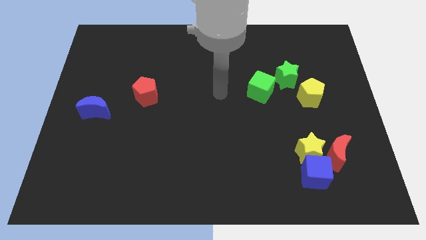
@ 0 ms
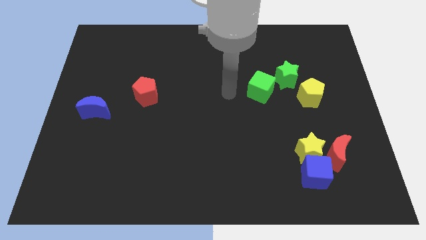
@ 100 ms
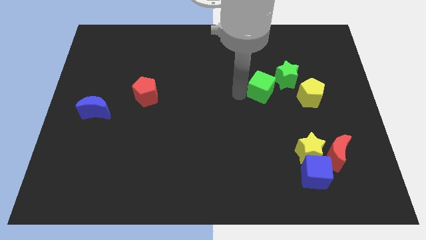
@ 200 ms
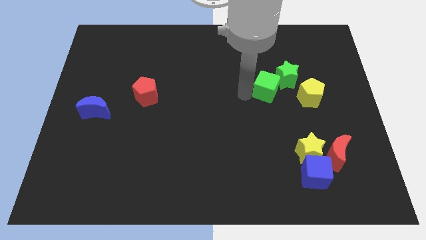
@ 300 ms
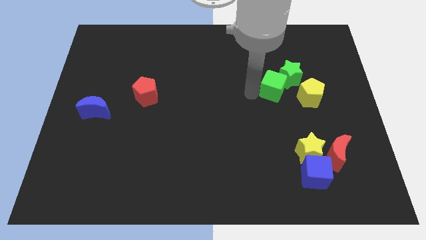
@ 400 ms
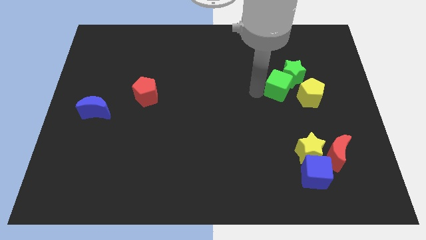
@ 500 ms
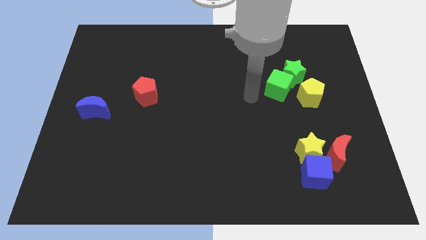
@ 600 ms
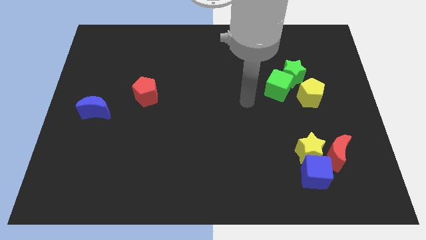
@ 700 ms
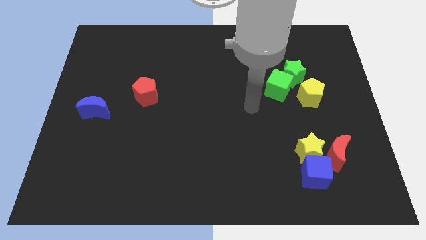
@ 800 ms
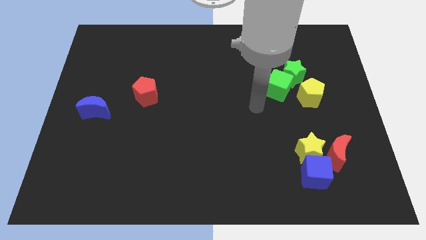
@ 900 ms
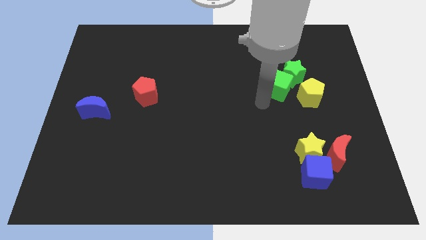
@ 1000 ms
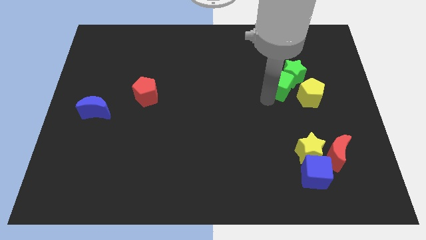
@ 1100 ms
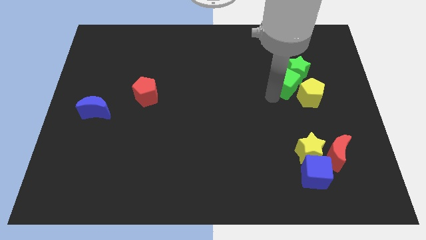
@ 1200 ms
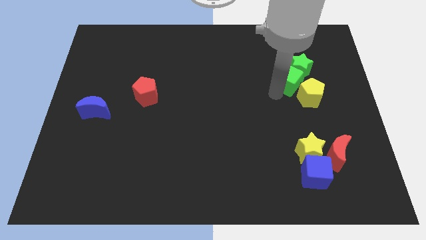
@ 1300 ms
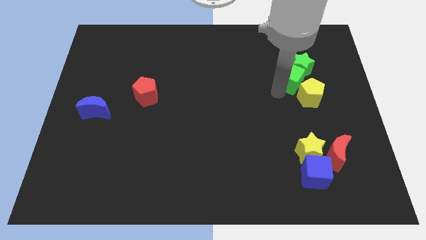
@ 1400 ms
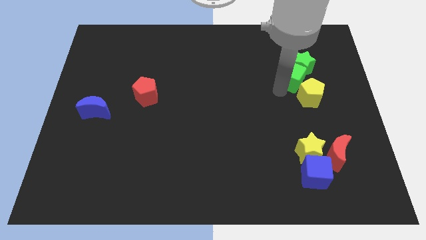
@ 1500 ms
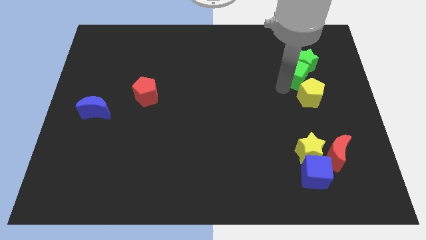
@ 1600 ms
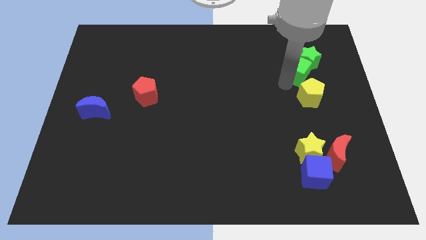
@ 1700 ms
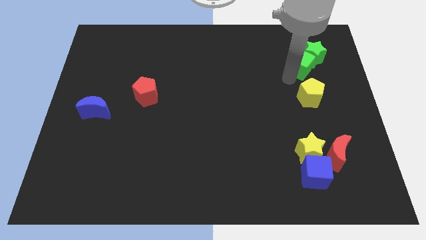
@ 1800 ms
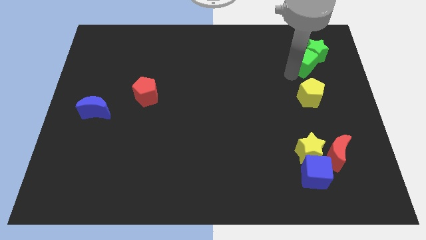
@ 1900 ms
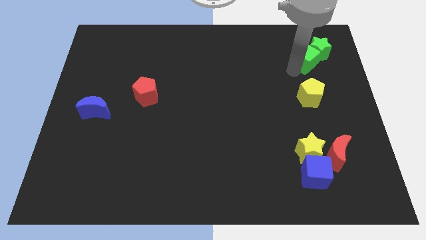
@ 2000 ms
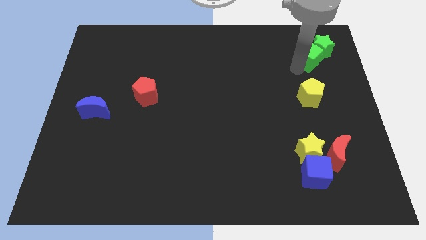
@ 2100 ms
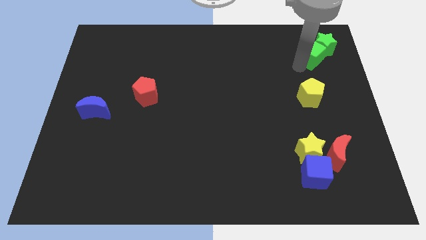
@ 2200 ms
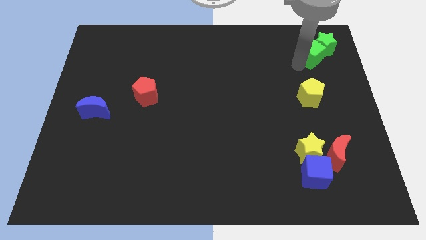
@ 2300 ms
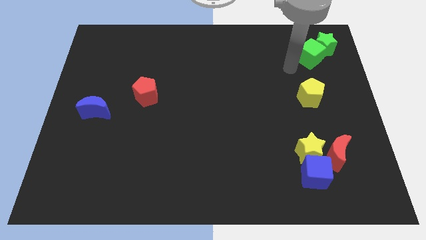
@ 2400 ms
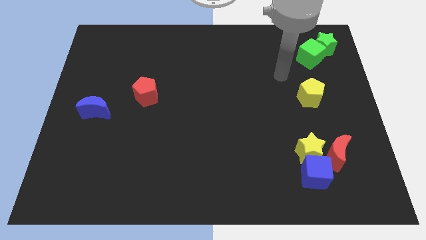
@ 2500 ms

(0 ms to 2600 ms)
place the green blocks at top right corner of the board

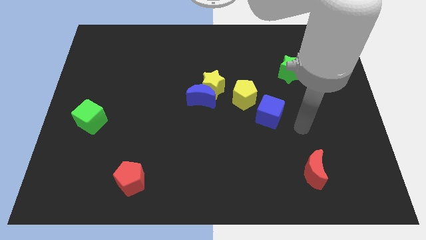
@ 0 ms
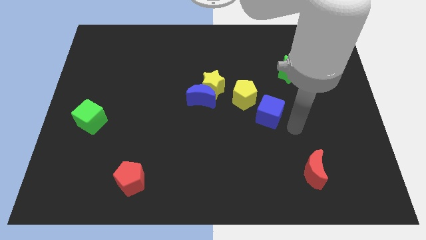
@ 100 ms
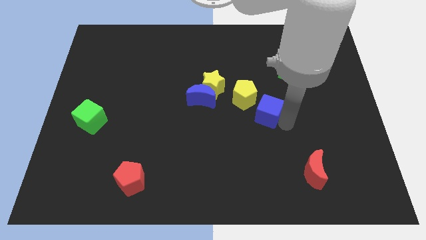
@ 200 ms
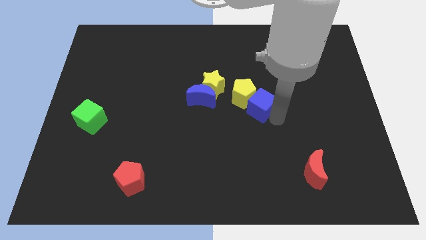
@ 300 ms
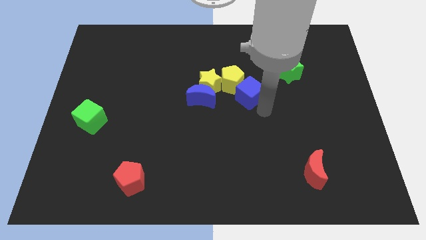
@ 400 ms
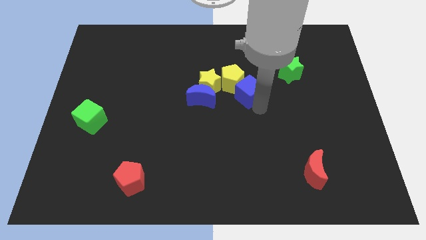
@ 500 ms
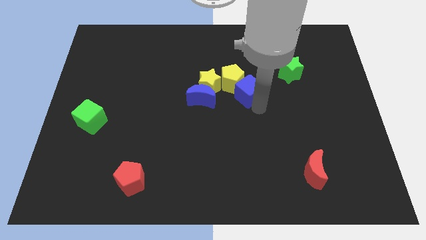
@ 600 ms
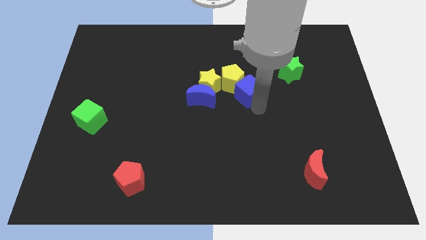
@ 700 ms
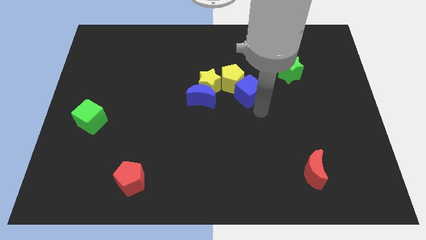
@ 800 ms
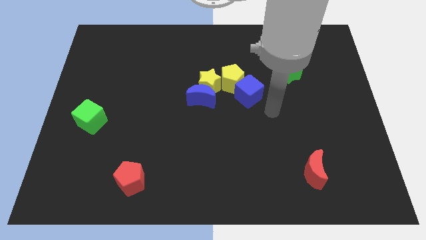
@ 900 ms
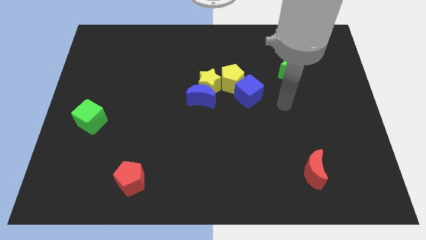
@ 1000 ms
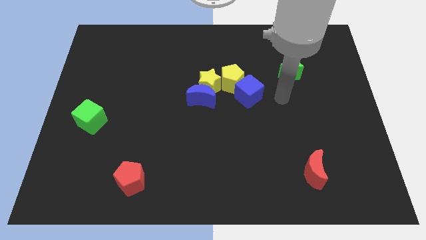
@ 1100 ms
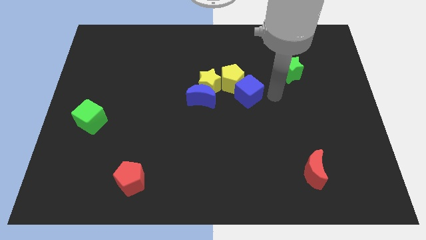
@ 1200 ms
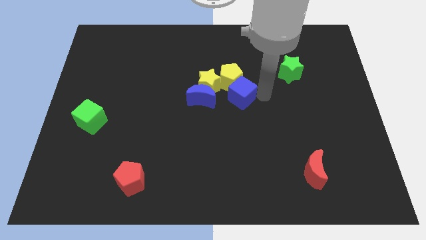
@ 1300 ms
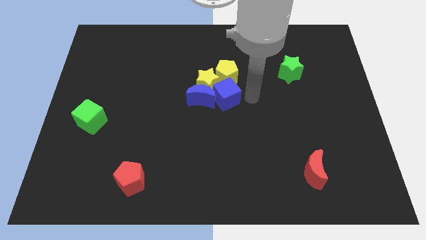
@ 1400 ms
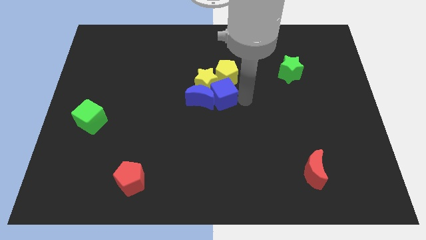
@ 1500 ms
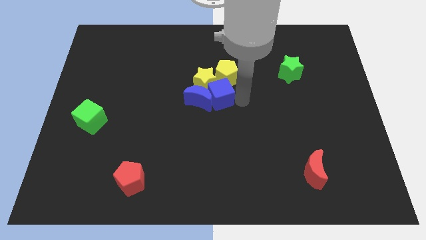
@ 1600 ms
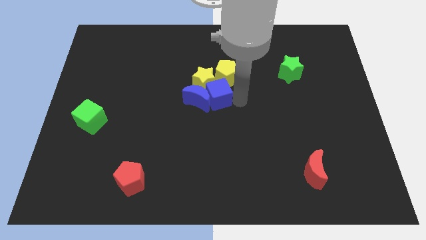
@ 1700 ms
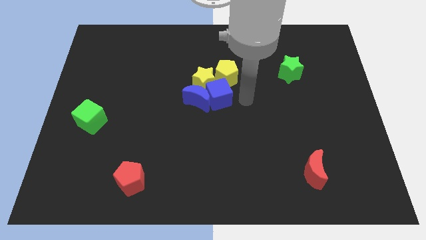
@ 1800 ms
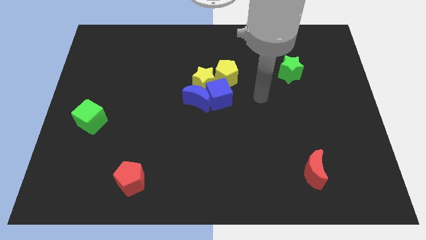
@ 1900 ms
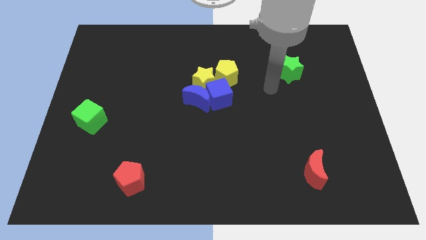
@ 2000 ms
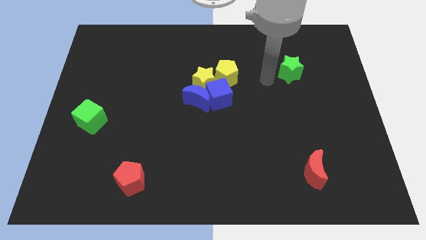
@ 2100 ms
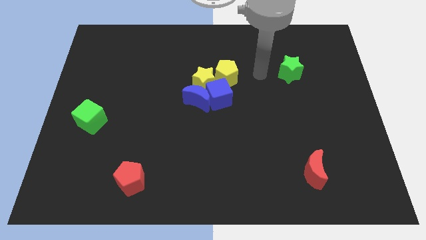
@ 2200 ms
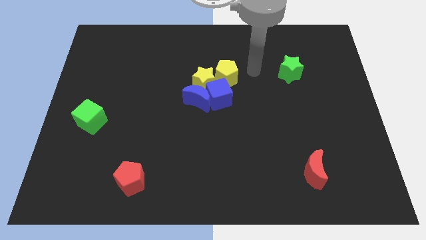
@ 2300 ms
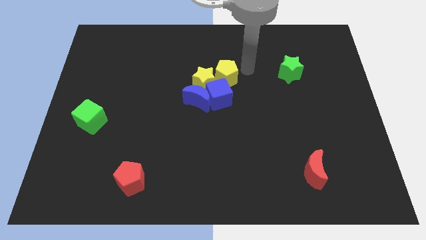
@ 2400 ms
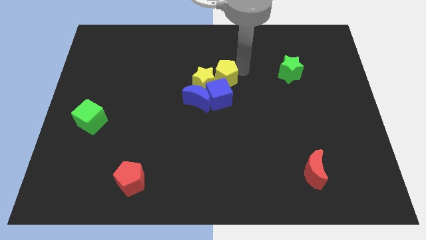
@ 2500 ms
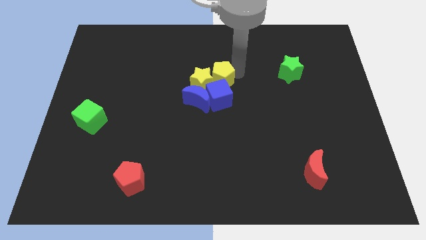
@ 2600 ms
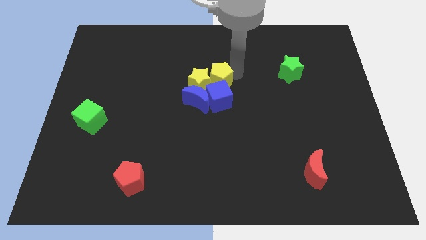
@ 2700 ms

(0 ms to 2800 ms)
move the blue cube right beside the blue moon

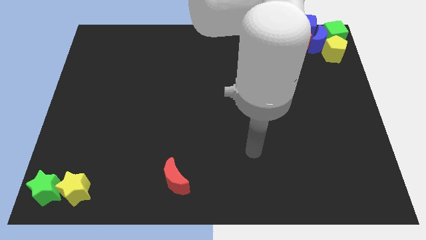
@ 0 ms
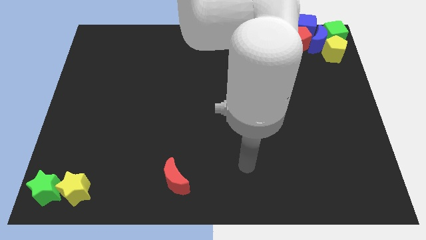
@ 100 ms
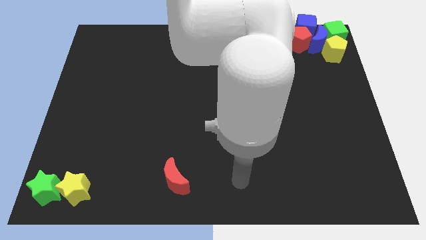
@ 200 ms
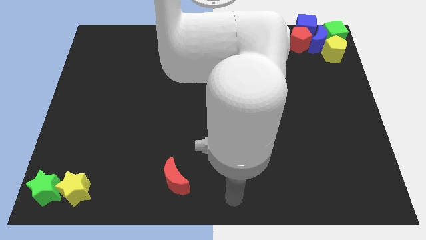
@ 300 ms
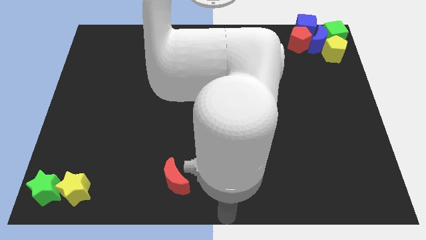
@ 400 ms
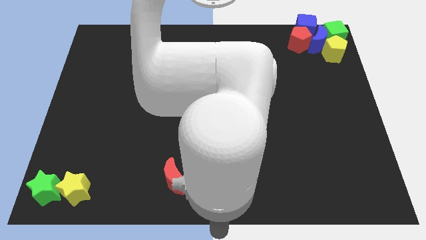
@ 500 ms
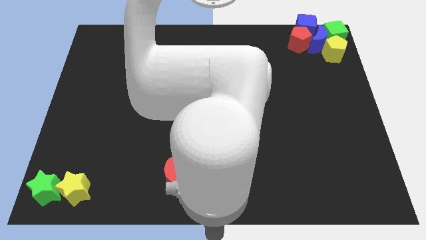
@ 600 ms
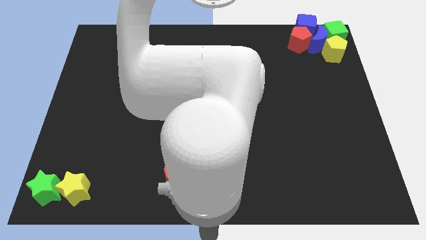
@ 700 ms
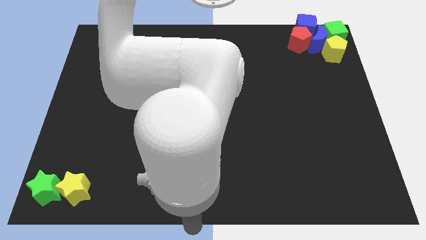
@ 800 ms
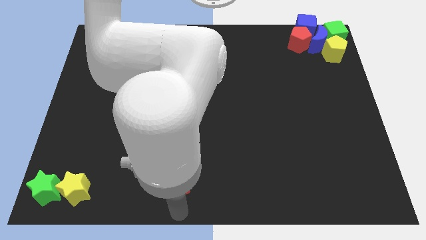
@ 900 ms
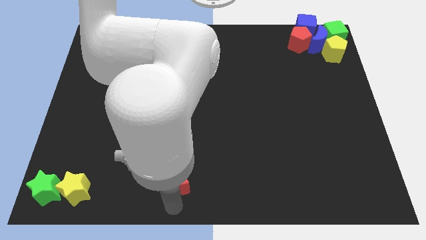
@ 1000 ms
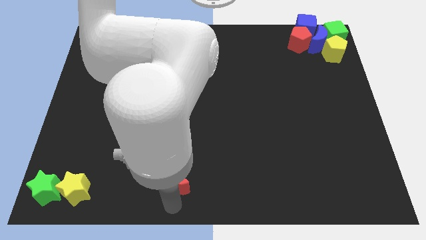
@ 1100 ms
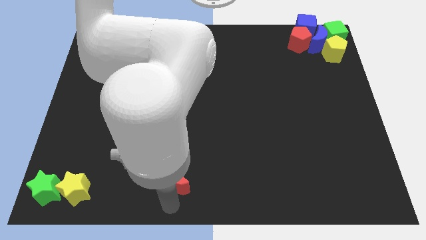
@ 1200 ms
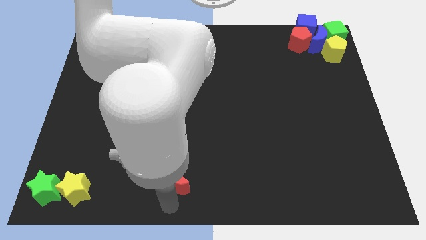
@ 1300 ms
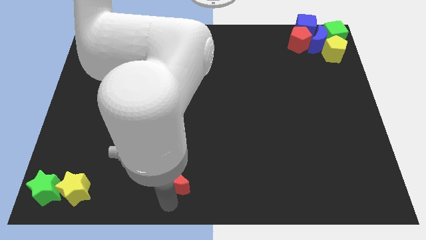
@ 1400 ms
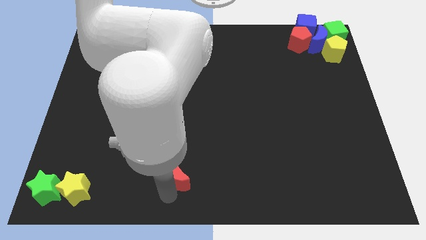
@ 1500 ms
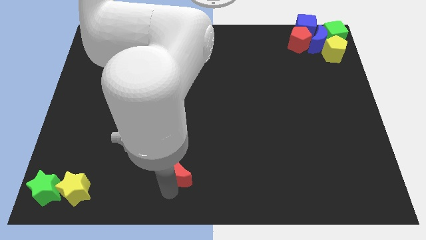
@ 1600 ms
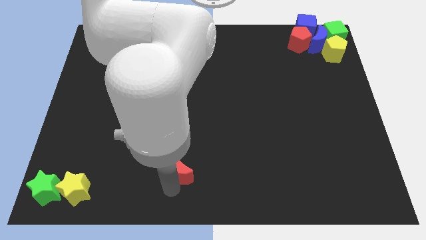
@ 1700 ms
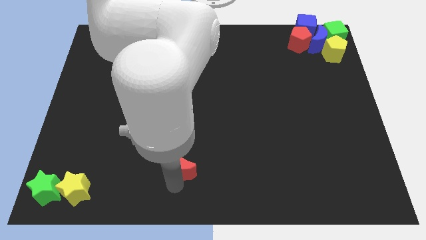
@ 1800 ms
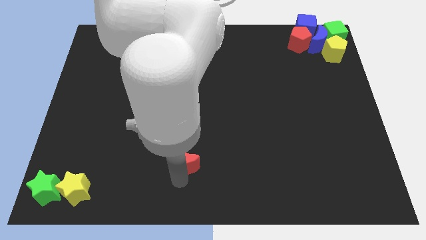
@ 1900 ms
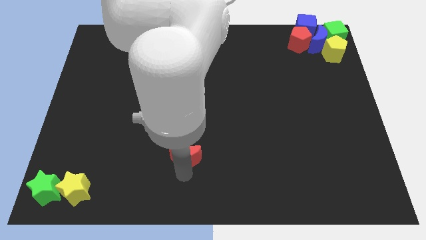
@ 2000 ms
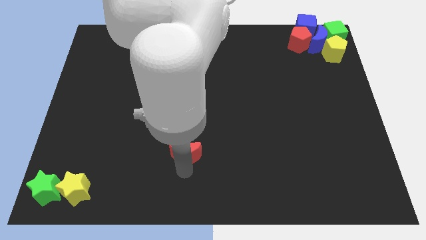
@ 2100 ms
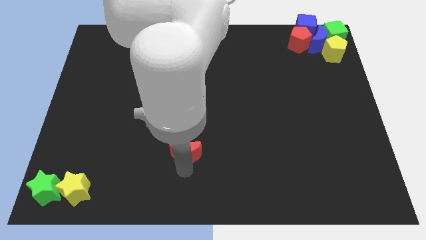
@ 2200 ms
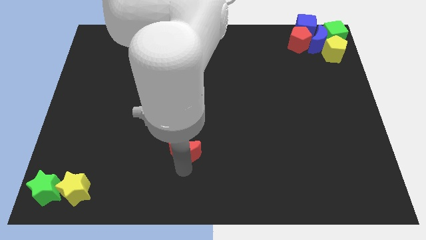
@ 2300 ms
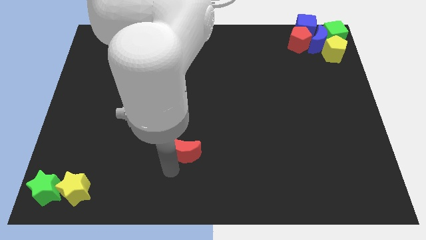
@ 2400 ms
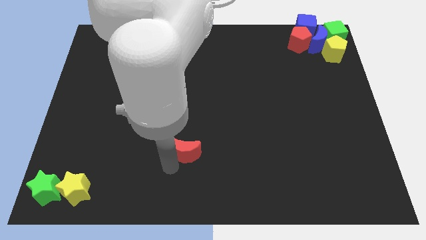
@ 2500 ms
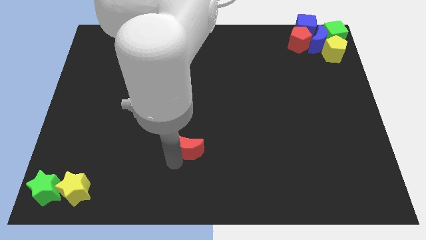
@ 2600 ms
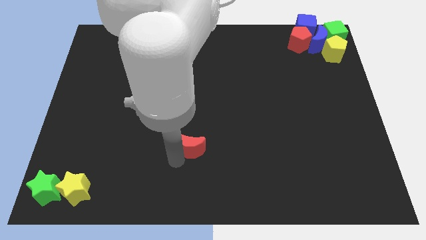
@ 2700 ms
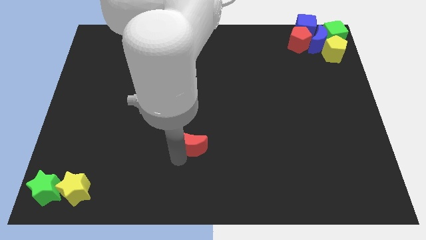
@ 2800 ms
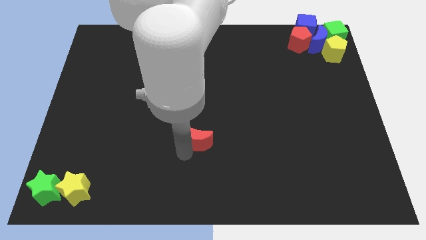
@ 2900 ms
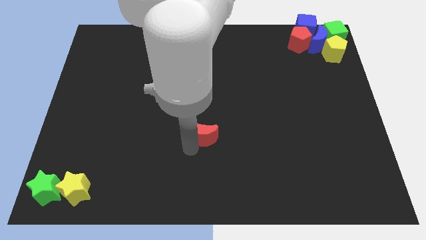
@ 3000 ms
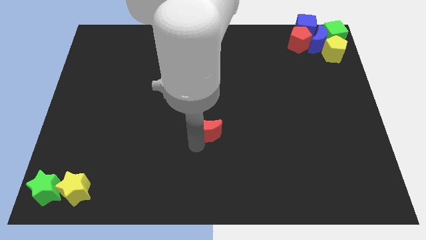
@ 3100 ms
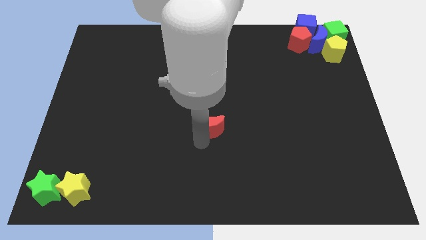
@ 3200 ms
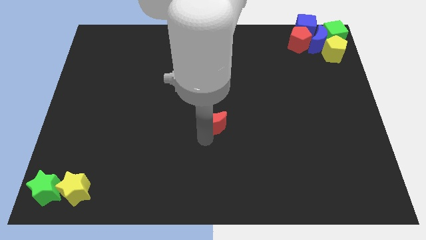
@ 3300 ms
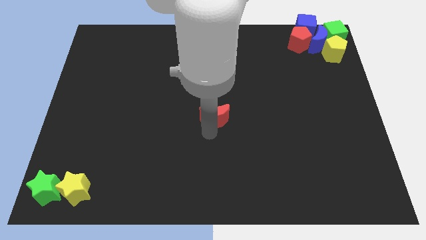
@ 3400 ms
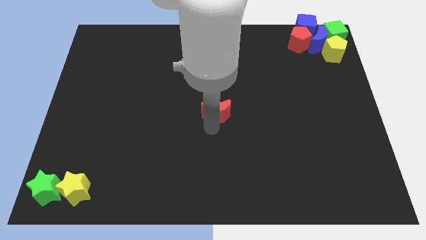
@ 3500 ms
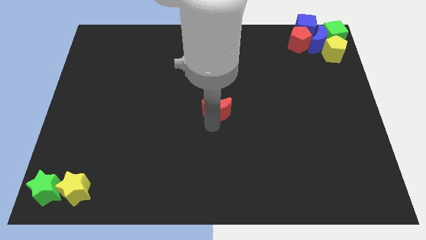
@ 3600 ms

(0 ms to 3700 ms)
move red moon to the center
